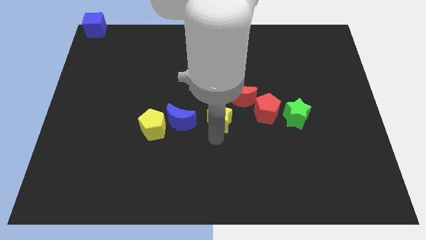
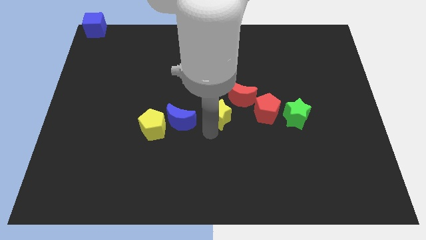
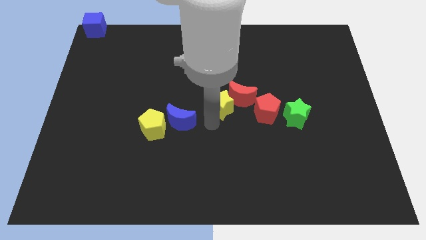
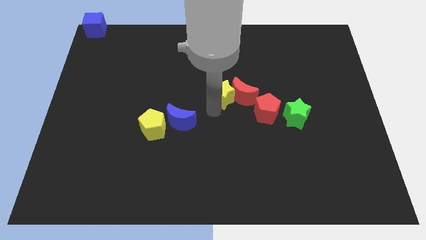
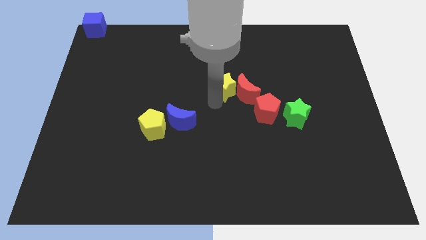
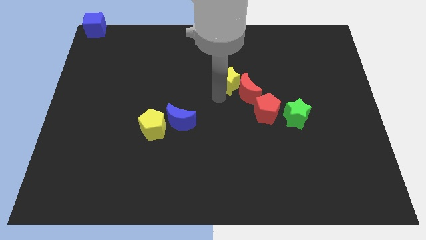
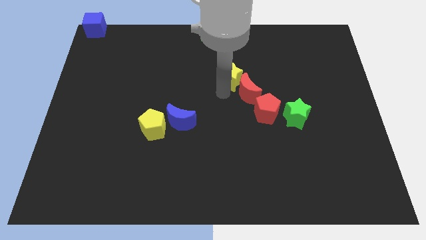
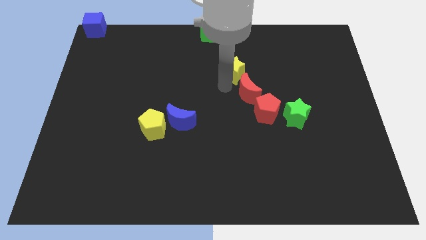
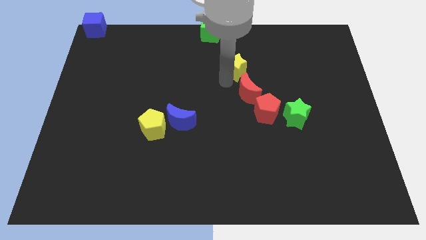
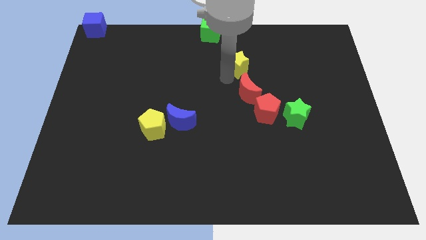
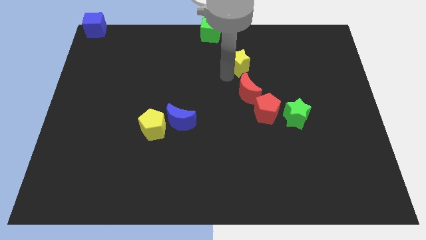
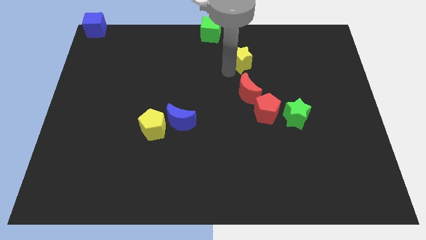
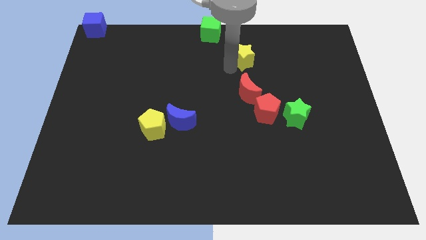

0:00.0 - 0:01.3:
place the yellow star above the red moon

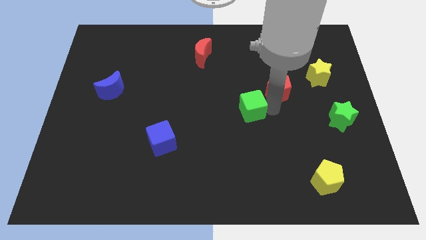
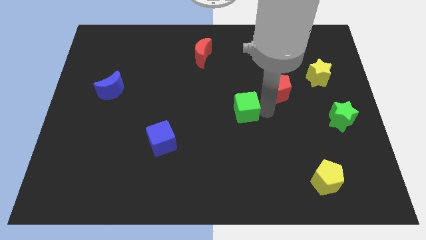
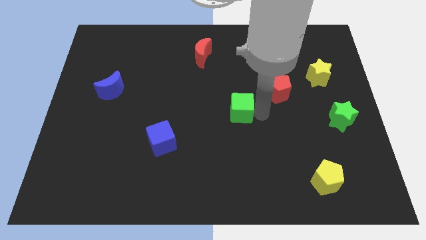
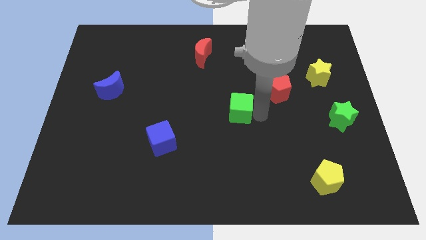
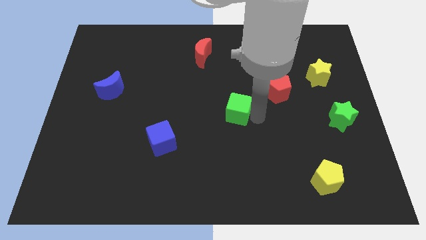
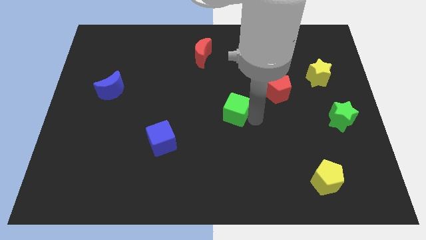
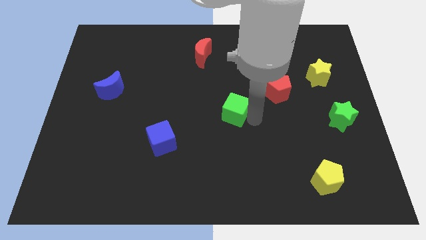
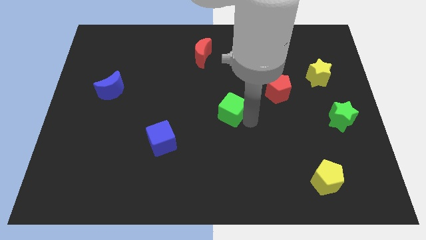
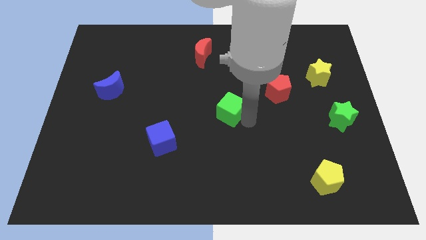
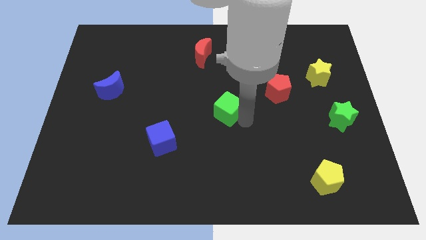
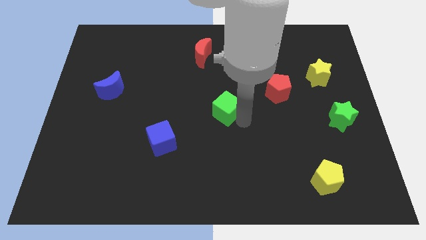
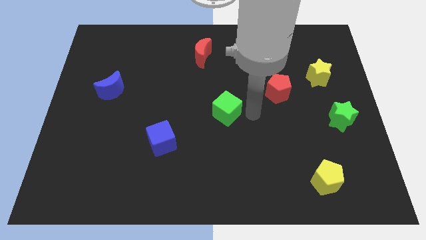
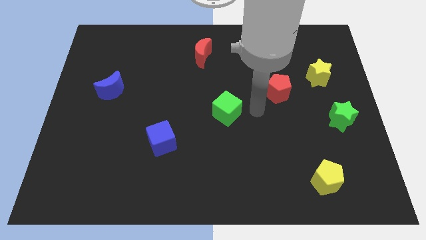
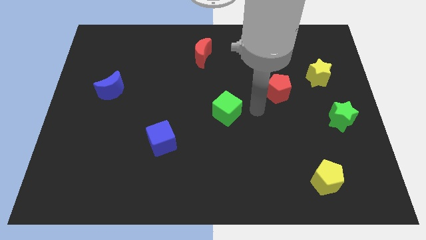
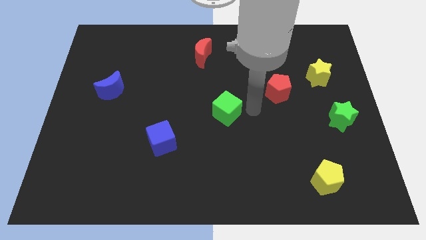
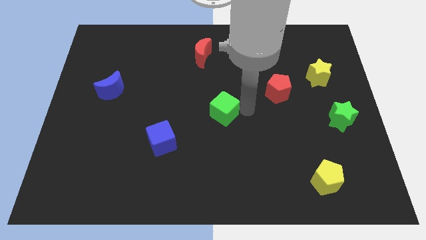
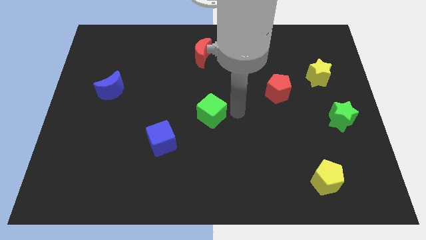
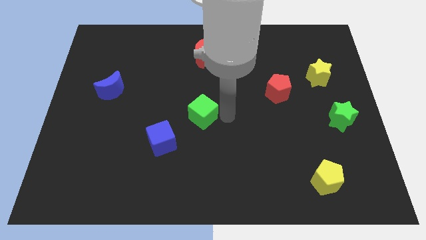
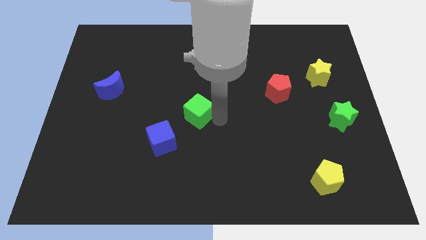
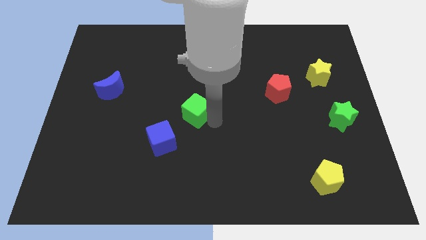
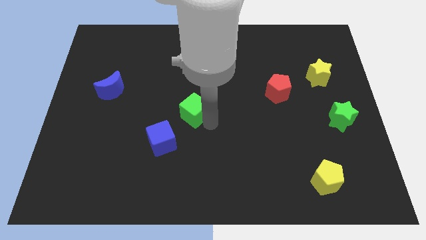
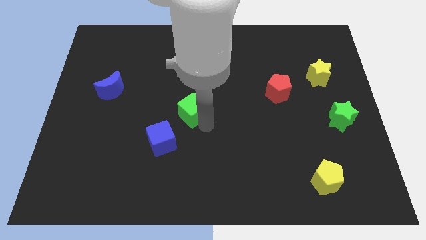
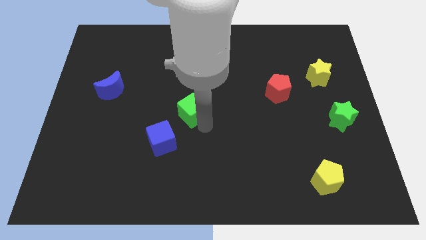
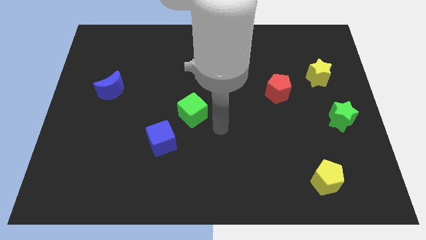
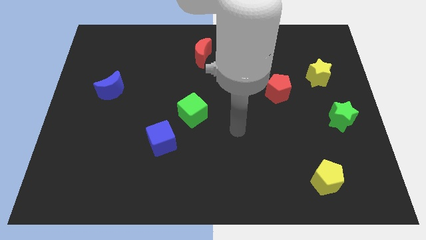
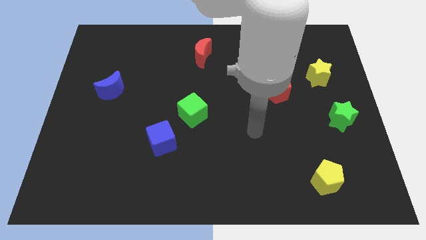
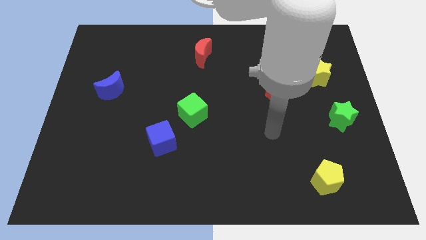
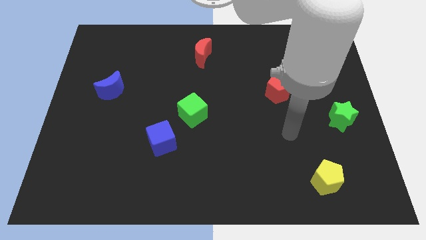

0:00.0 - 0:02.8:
place the green cube at the top right side of blue cube

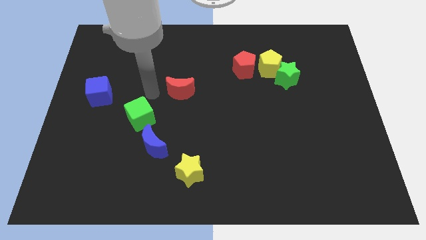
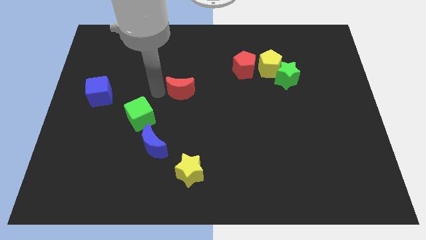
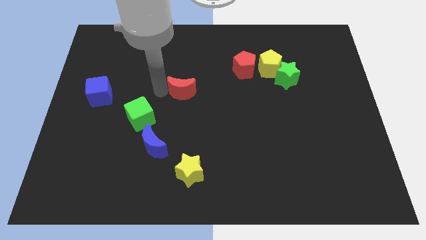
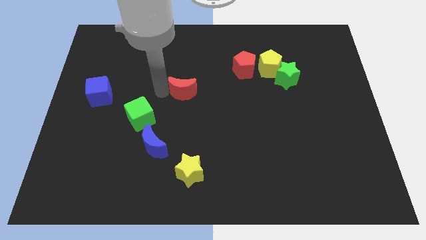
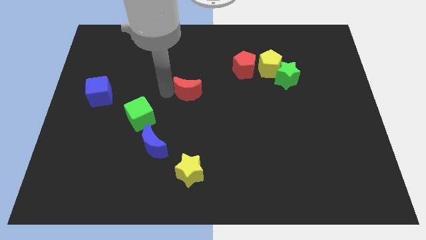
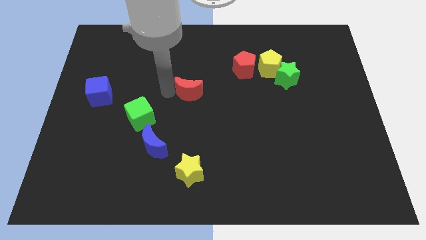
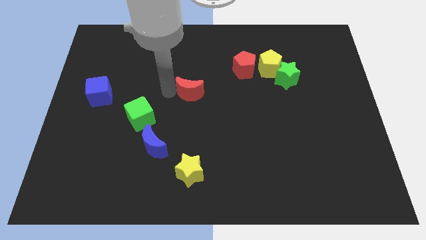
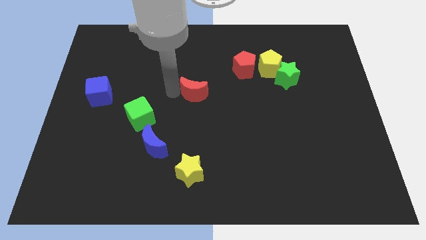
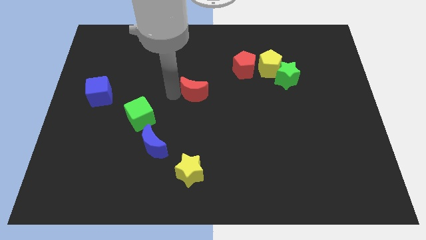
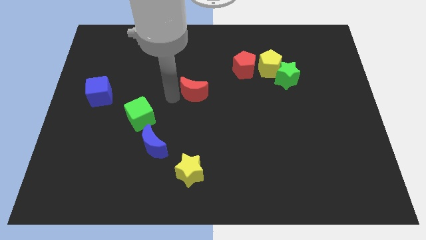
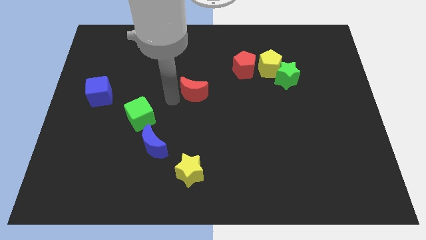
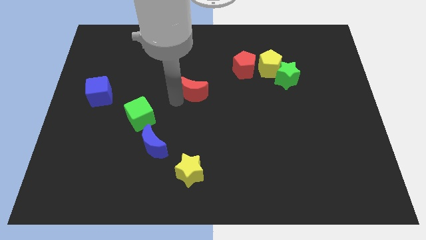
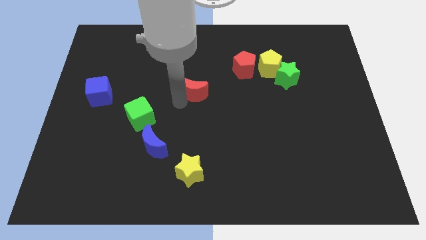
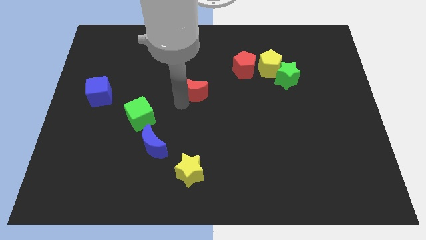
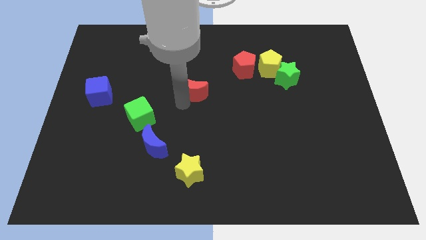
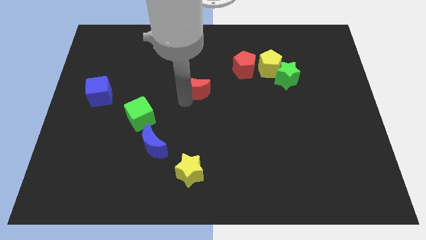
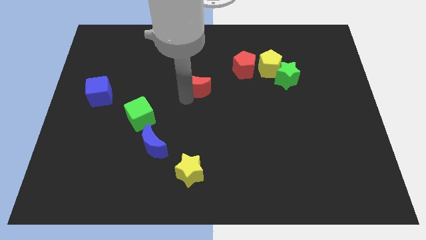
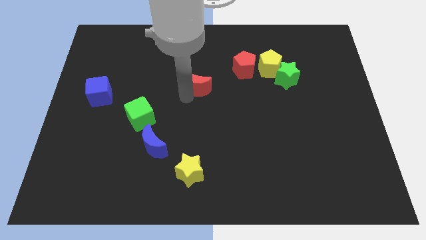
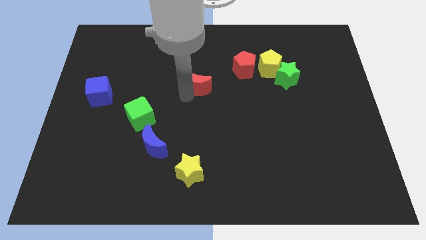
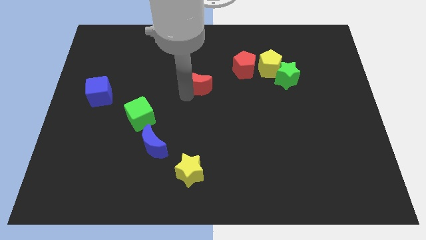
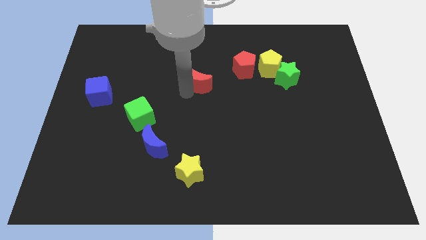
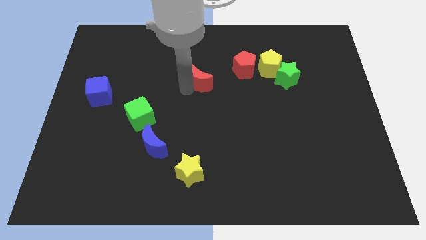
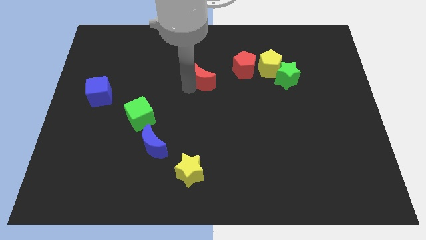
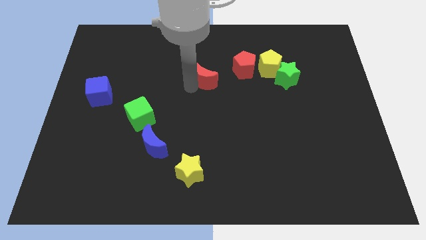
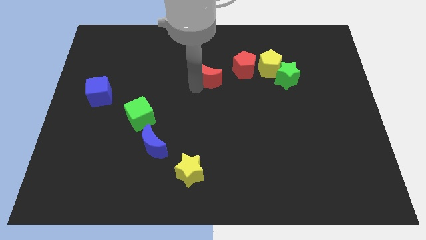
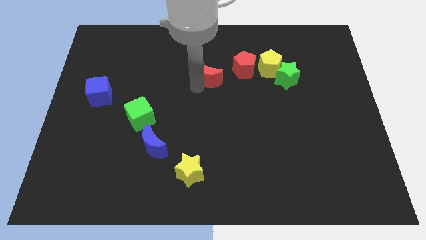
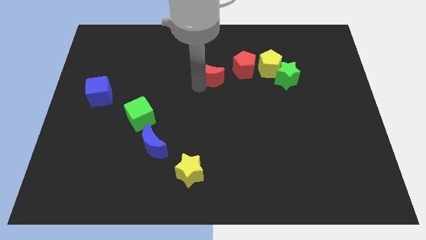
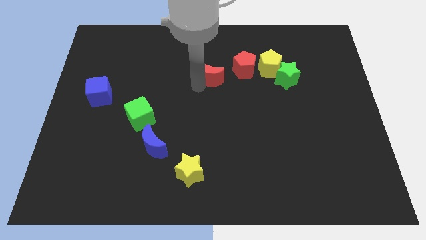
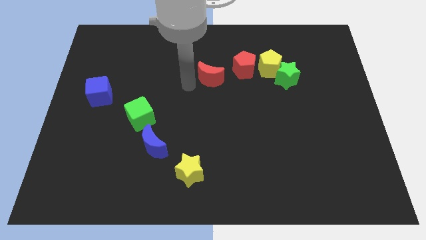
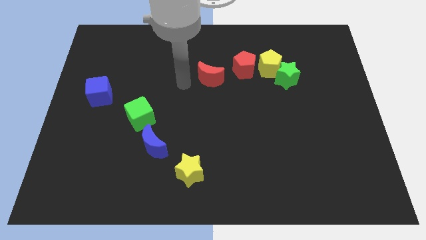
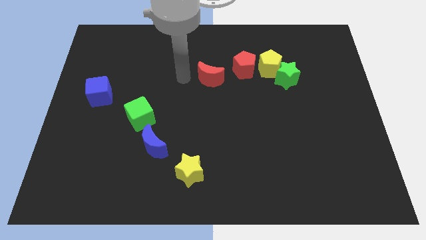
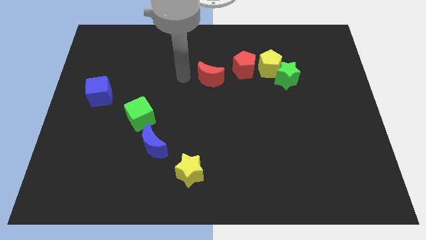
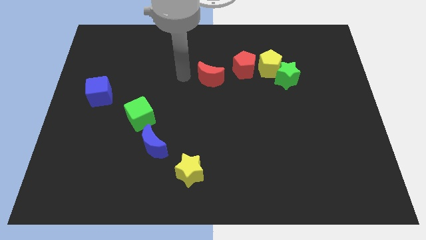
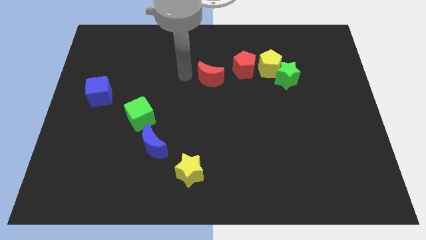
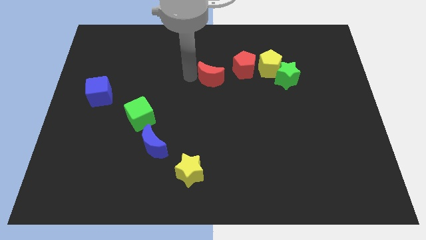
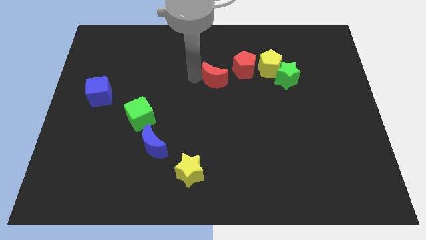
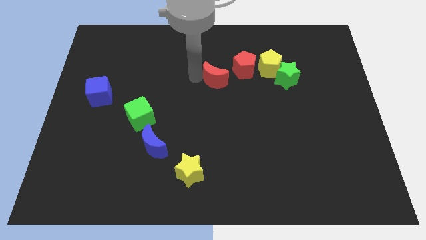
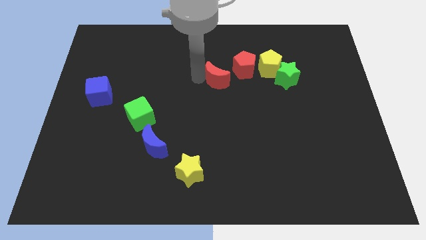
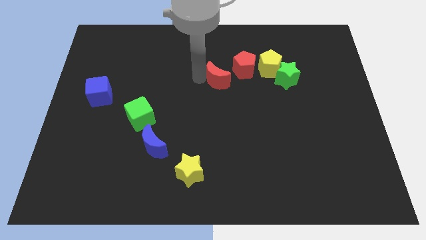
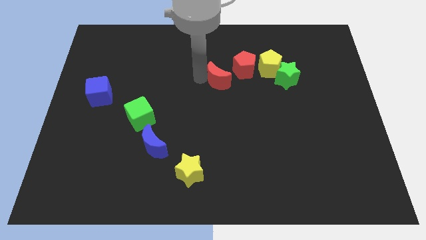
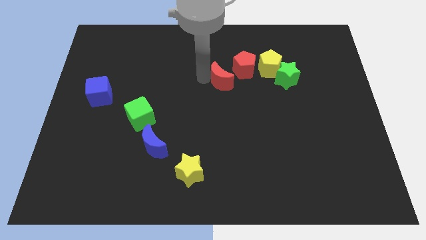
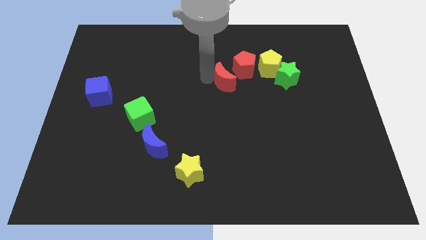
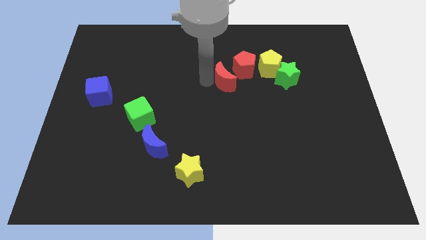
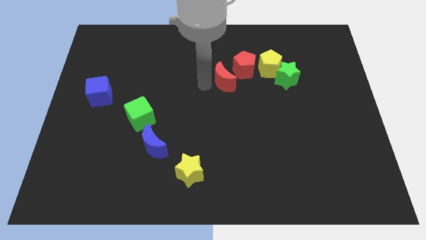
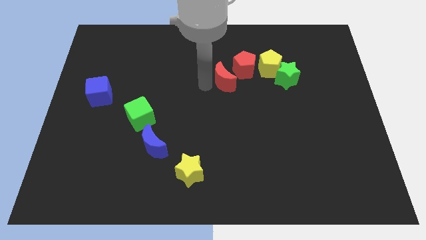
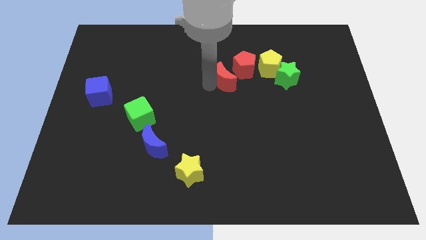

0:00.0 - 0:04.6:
push the red crescent to the bottom left of the red pentagon

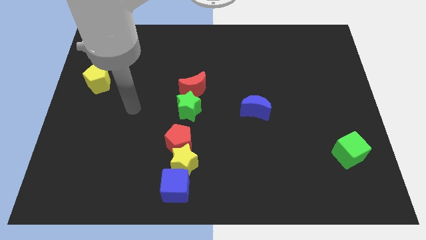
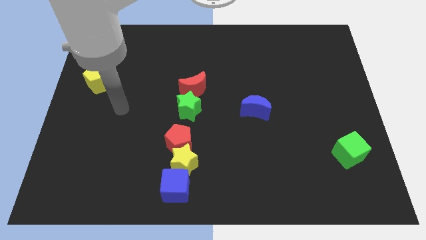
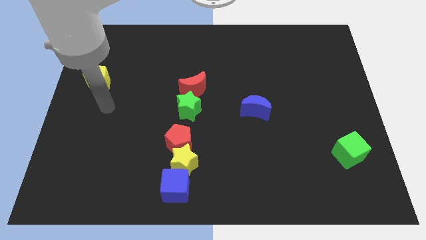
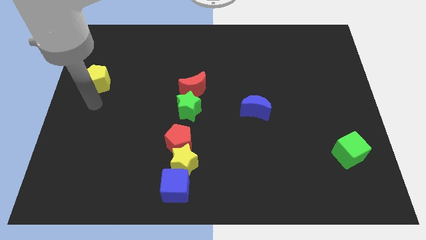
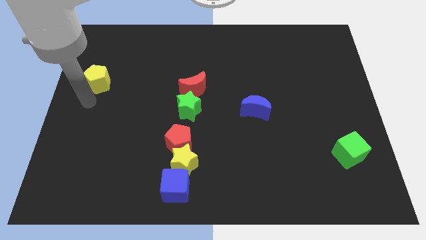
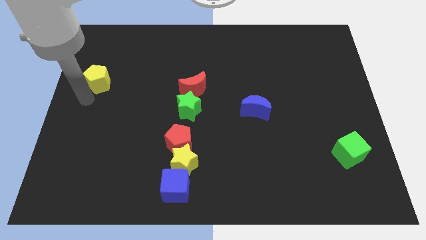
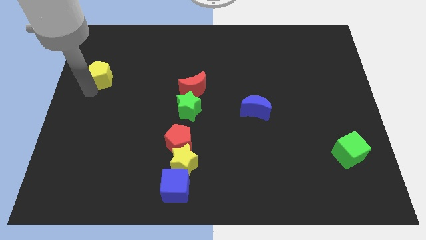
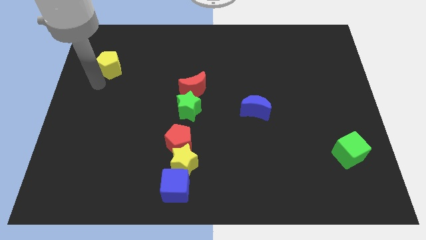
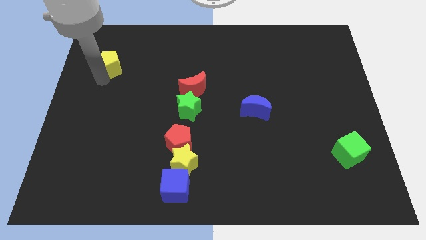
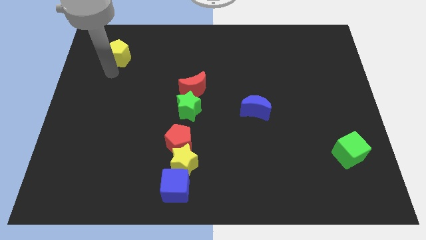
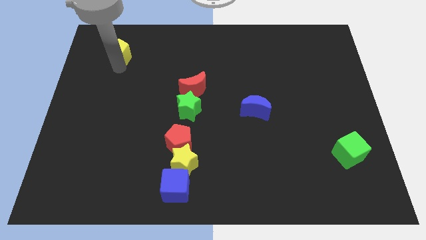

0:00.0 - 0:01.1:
push the yellow pentagon towards the top left corner of the board
